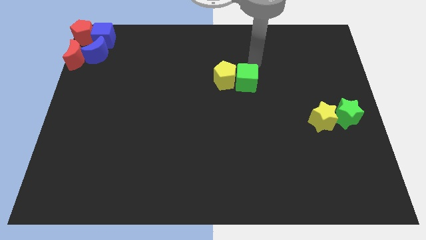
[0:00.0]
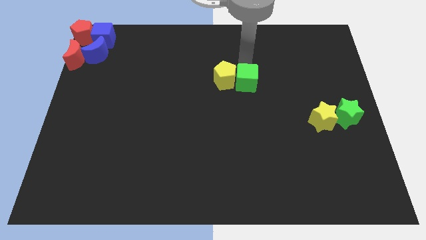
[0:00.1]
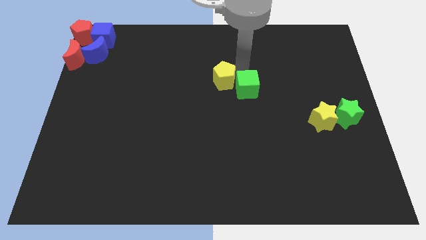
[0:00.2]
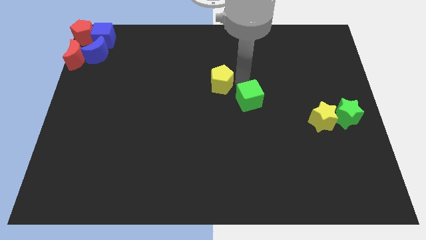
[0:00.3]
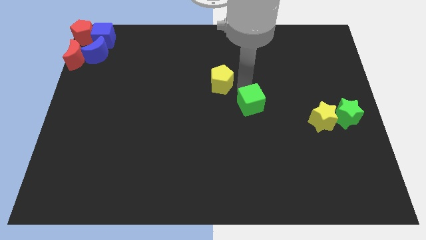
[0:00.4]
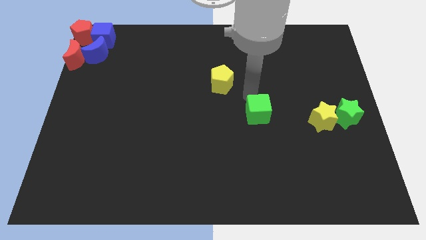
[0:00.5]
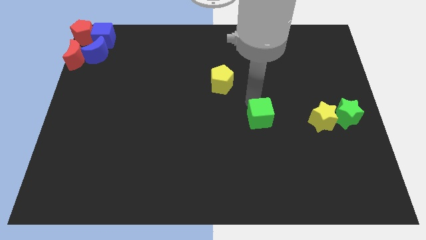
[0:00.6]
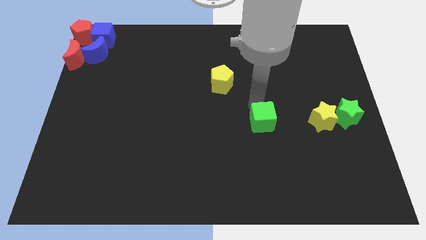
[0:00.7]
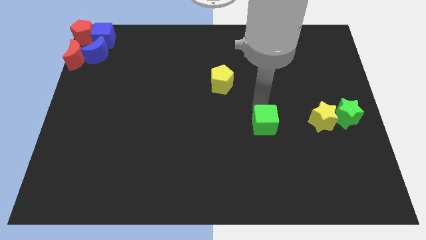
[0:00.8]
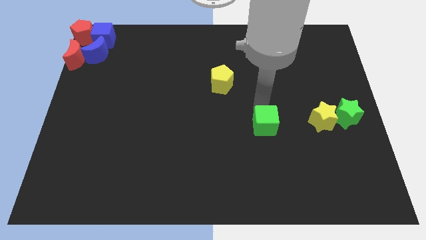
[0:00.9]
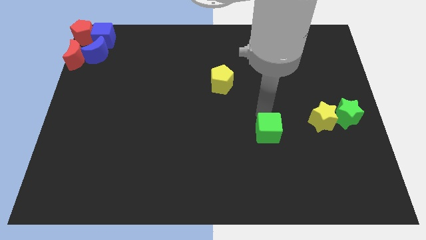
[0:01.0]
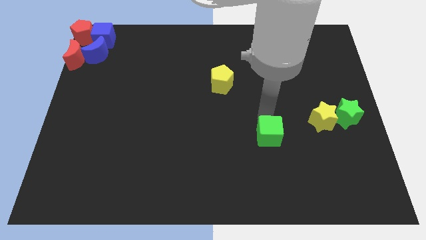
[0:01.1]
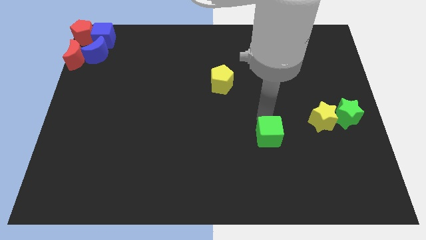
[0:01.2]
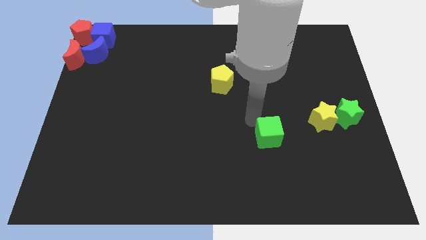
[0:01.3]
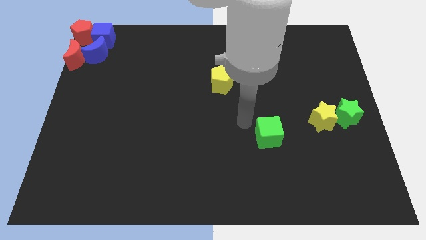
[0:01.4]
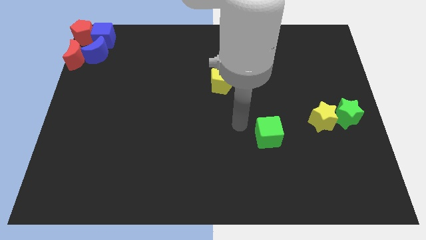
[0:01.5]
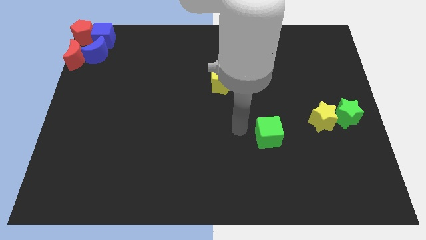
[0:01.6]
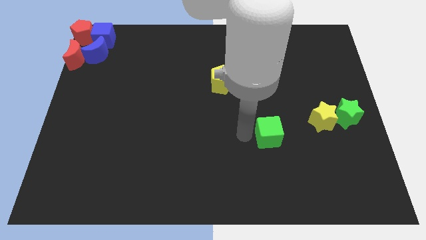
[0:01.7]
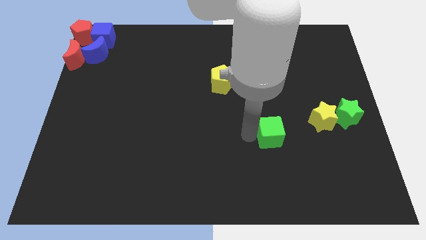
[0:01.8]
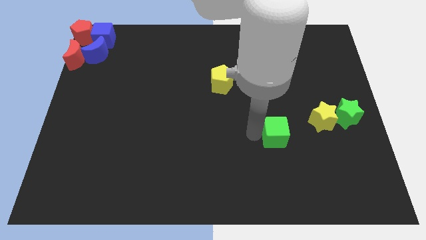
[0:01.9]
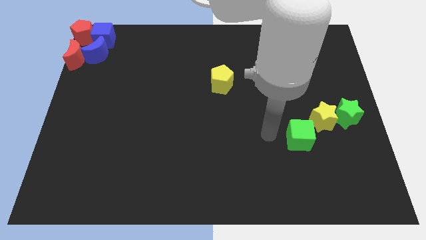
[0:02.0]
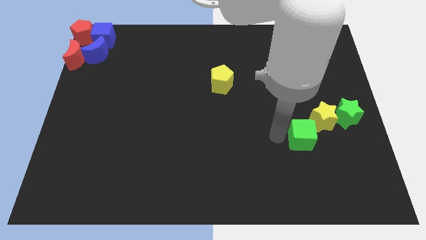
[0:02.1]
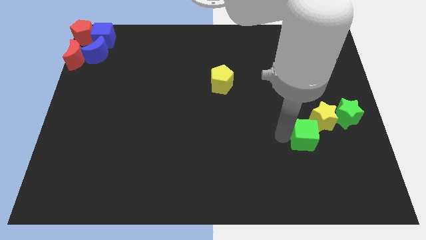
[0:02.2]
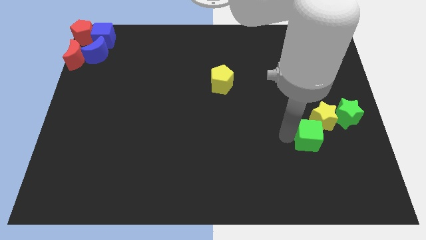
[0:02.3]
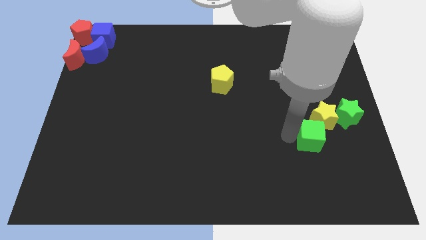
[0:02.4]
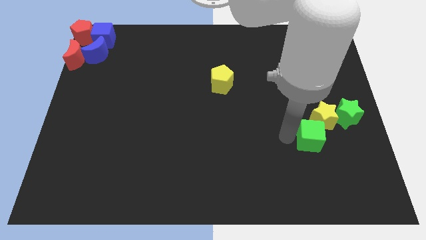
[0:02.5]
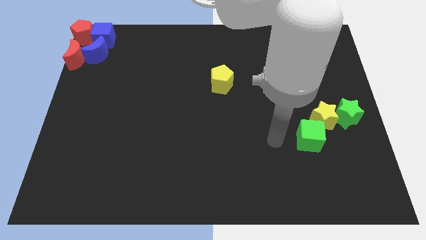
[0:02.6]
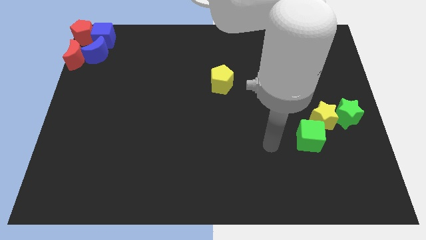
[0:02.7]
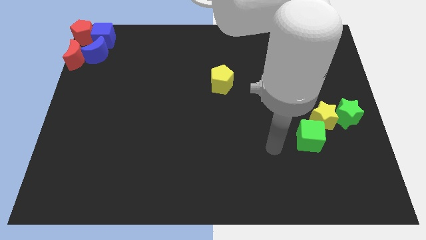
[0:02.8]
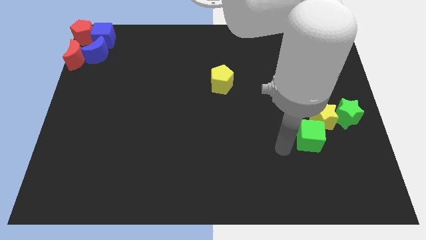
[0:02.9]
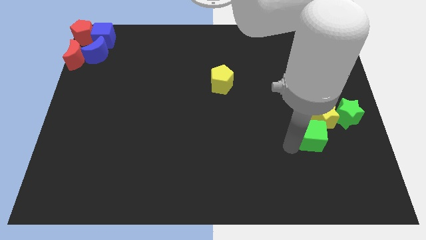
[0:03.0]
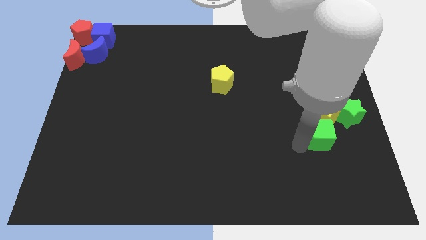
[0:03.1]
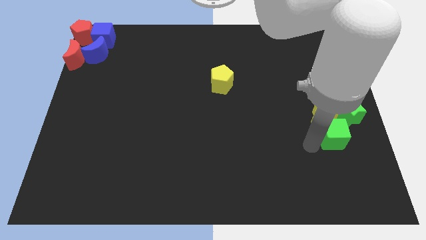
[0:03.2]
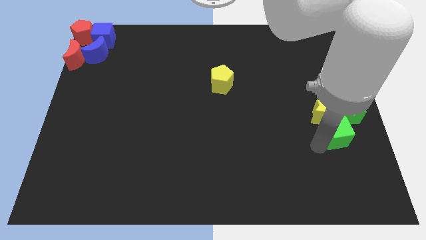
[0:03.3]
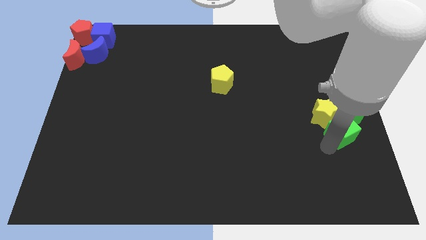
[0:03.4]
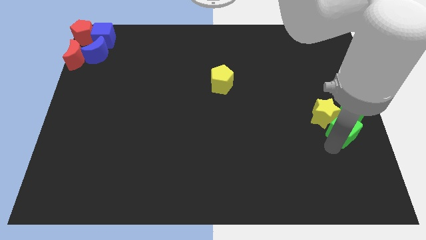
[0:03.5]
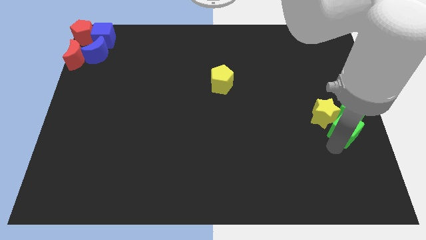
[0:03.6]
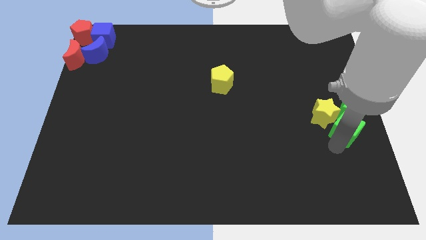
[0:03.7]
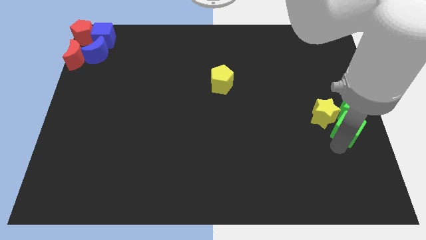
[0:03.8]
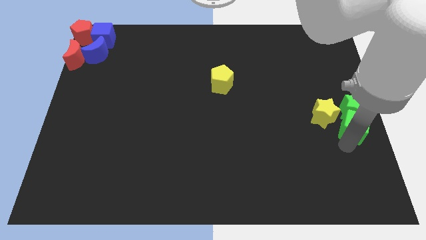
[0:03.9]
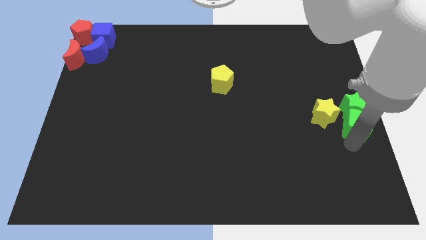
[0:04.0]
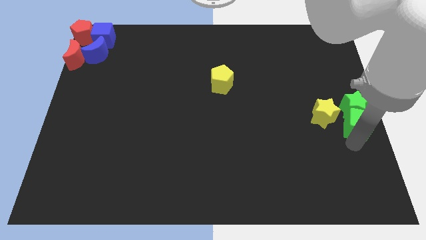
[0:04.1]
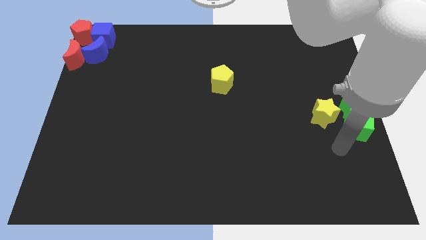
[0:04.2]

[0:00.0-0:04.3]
push the green cube at the bottom of the green star

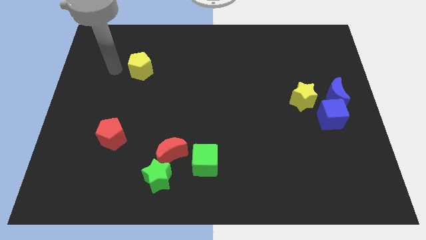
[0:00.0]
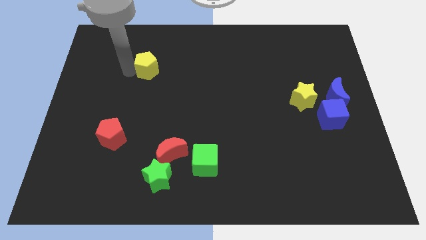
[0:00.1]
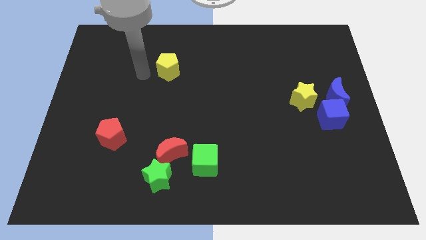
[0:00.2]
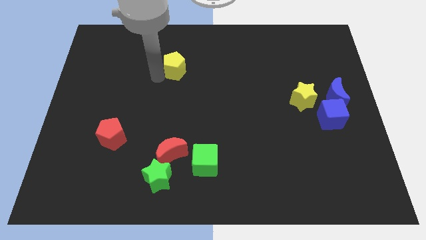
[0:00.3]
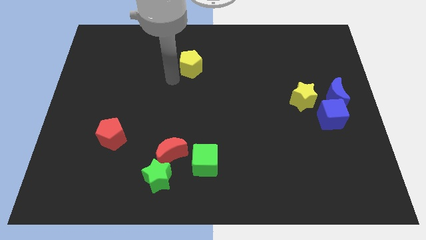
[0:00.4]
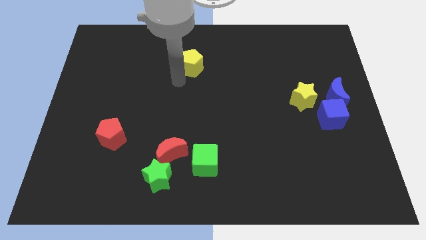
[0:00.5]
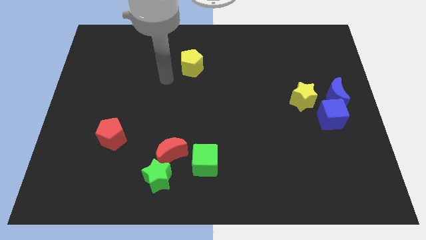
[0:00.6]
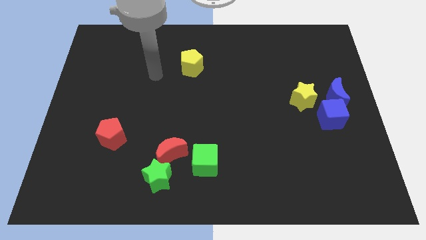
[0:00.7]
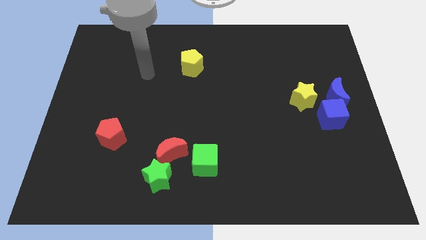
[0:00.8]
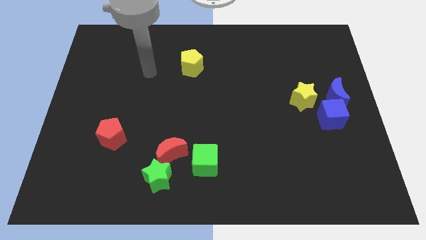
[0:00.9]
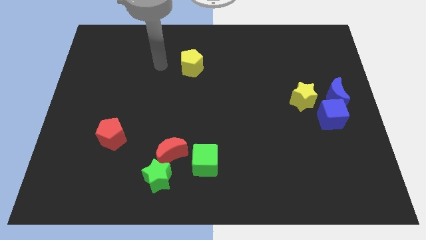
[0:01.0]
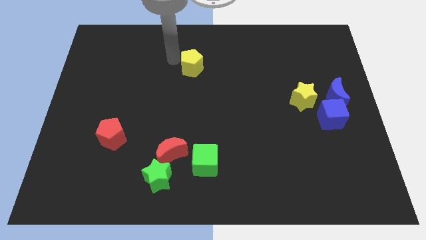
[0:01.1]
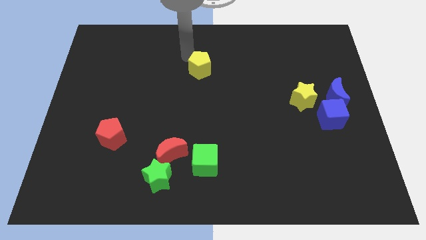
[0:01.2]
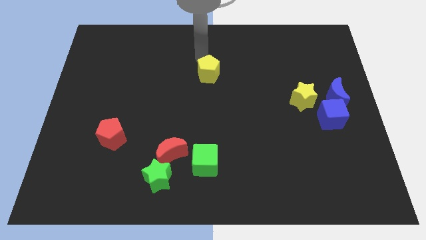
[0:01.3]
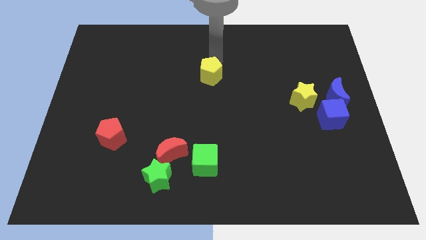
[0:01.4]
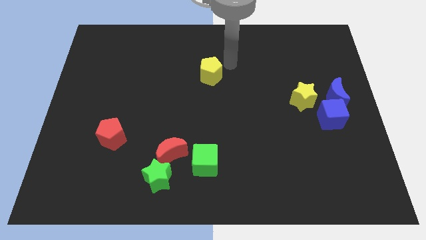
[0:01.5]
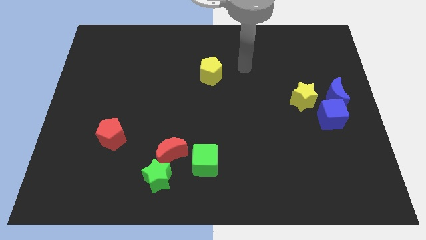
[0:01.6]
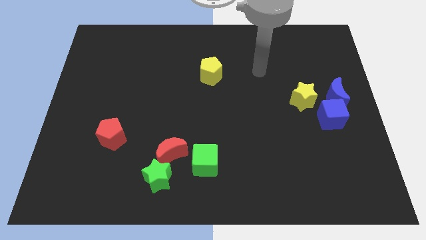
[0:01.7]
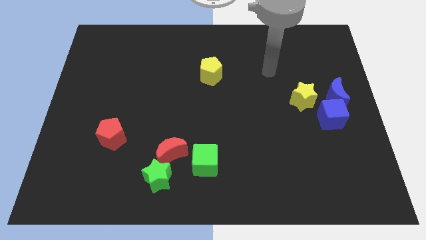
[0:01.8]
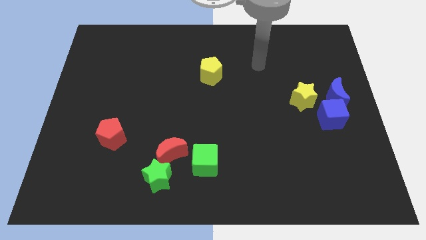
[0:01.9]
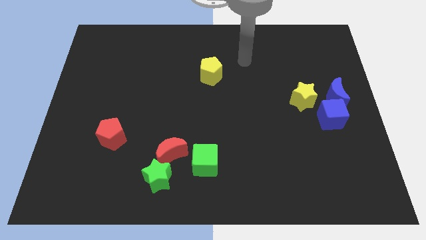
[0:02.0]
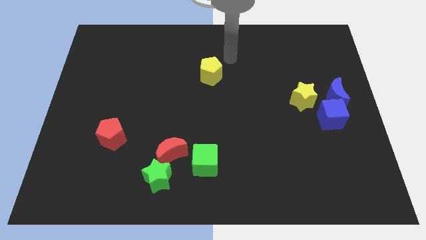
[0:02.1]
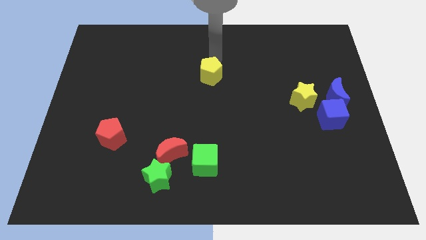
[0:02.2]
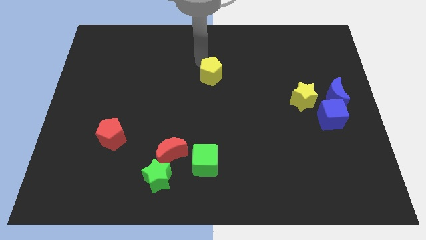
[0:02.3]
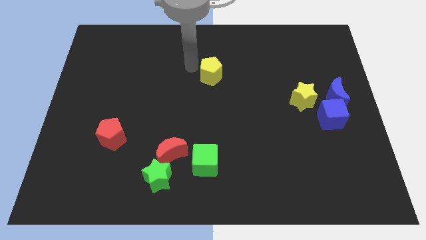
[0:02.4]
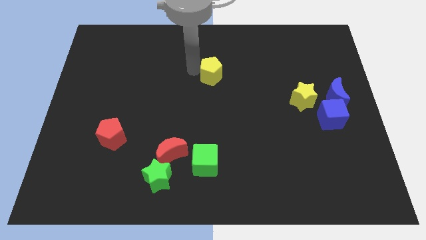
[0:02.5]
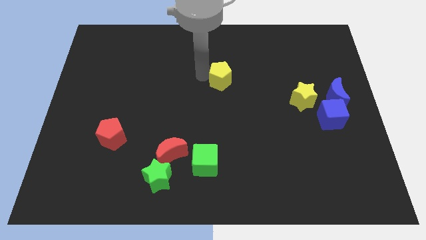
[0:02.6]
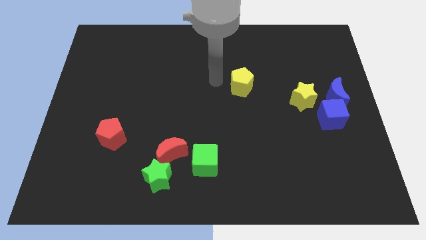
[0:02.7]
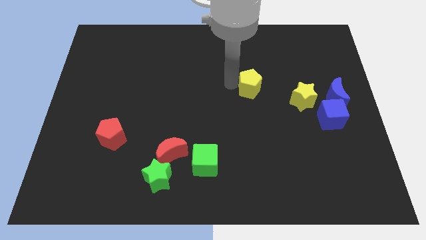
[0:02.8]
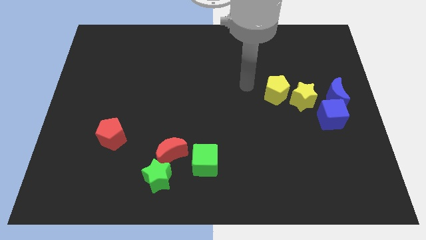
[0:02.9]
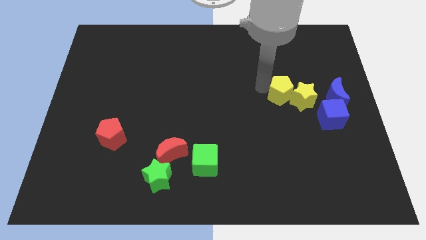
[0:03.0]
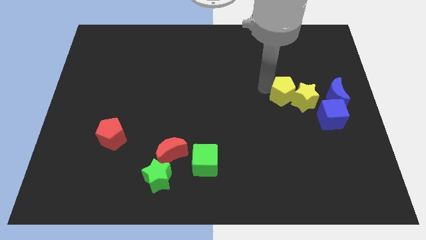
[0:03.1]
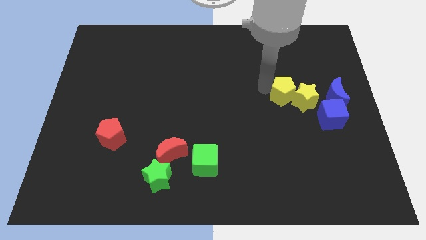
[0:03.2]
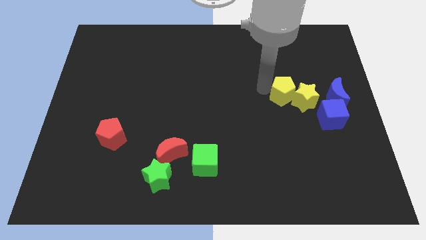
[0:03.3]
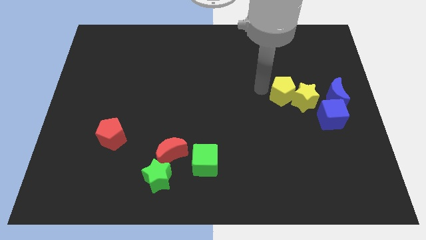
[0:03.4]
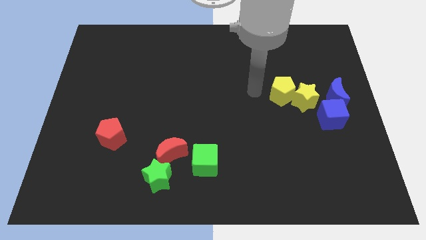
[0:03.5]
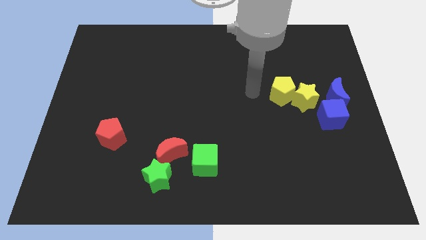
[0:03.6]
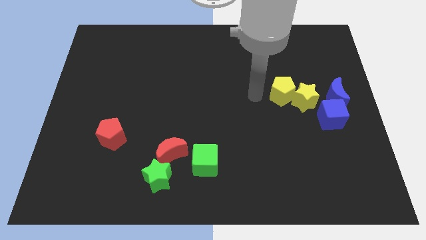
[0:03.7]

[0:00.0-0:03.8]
slide the yellow pentagon into the yellow star

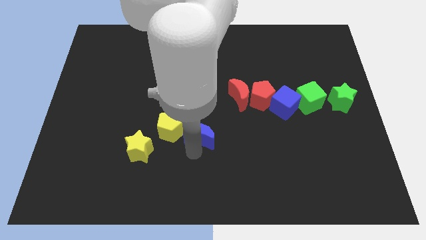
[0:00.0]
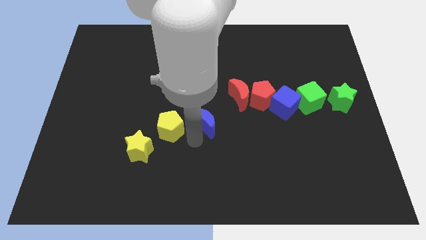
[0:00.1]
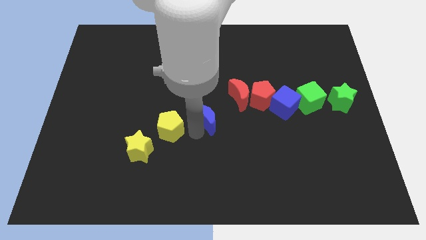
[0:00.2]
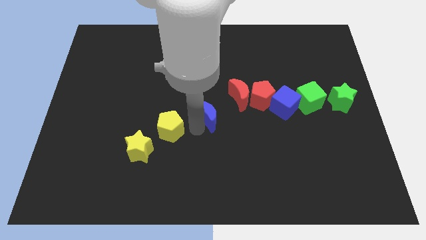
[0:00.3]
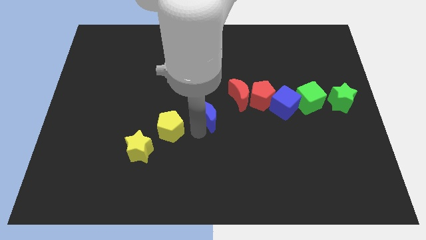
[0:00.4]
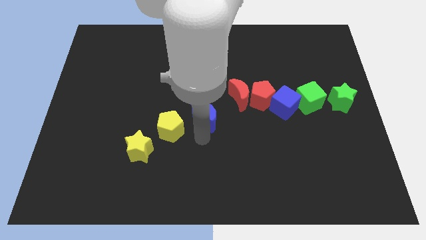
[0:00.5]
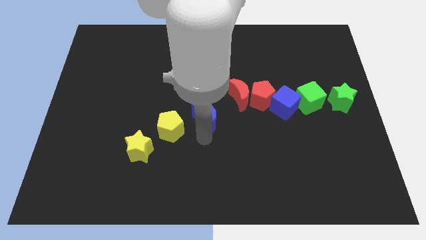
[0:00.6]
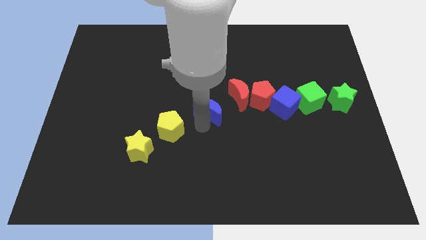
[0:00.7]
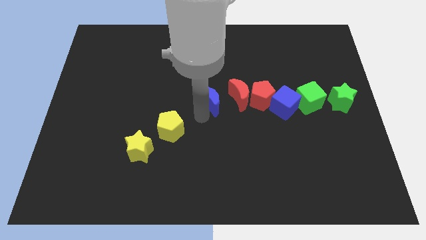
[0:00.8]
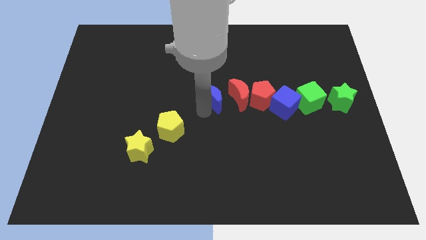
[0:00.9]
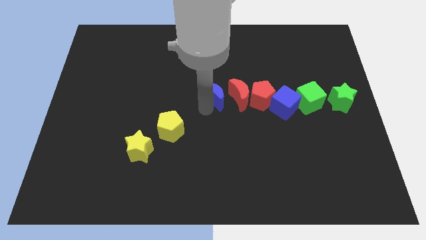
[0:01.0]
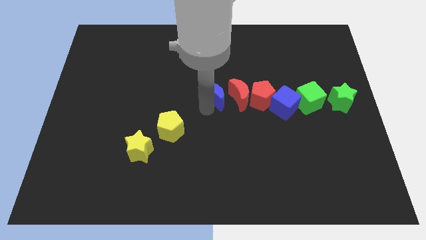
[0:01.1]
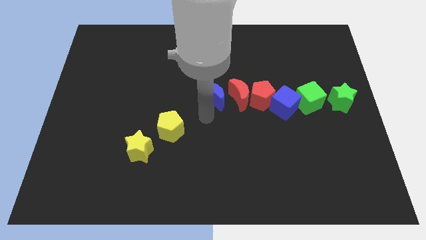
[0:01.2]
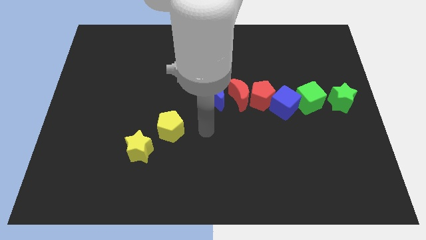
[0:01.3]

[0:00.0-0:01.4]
put the blue moon at the center
